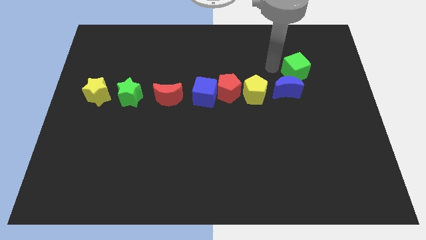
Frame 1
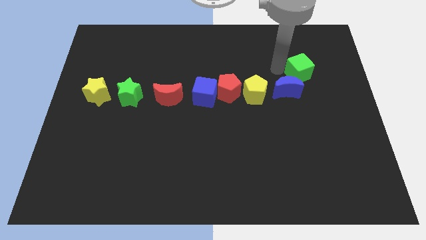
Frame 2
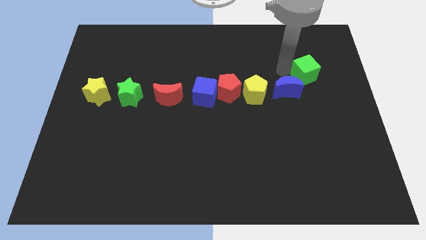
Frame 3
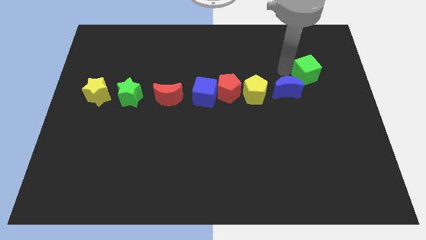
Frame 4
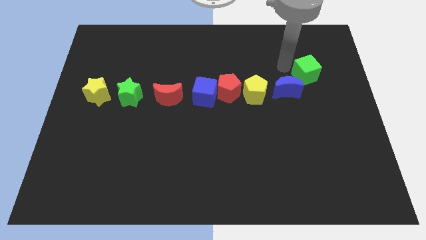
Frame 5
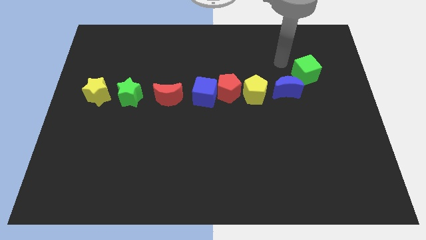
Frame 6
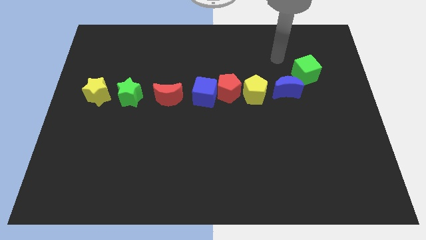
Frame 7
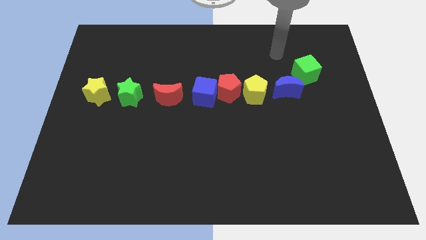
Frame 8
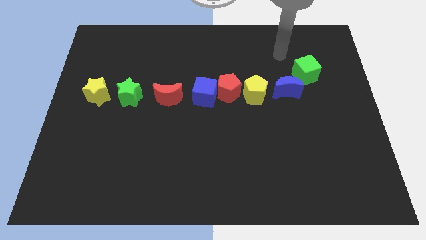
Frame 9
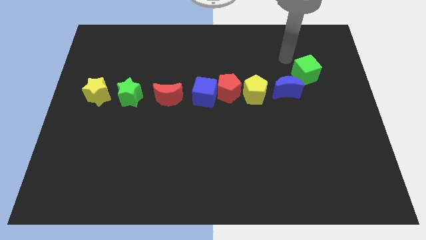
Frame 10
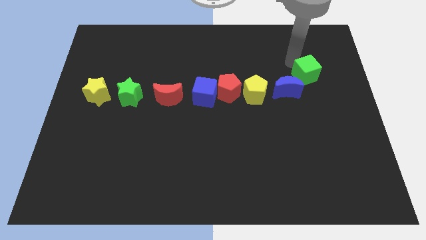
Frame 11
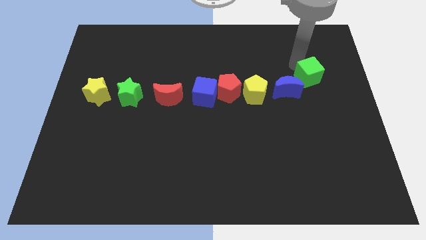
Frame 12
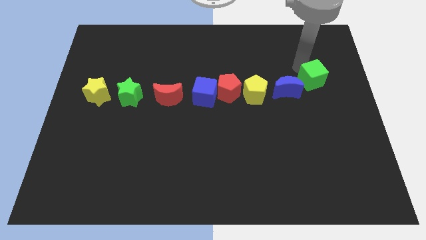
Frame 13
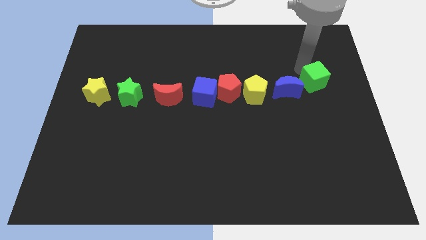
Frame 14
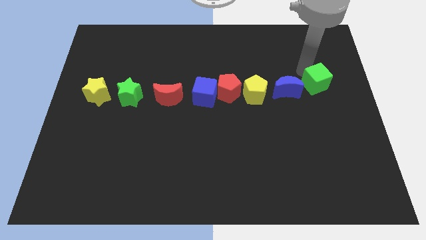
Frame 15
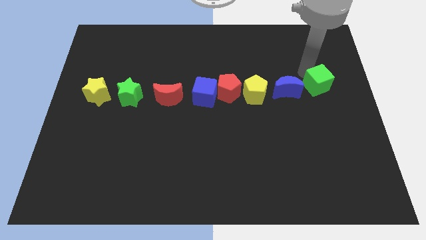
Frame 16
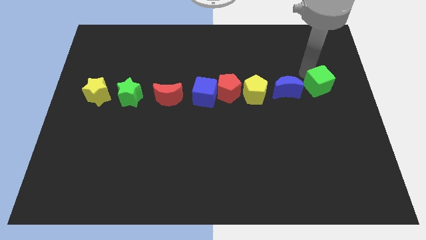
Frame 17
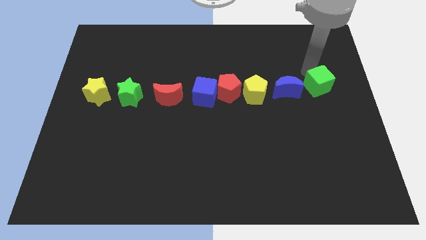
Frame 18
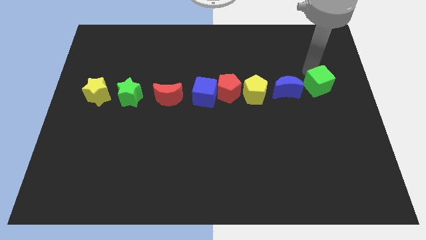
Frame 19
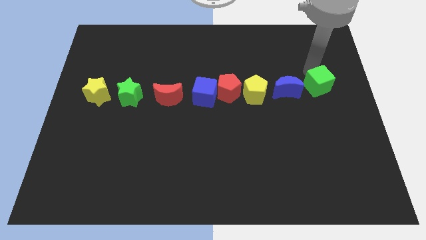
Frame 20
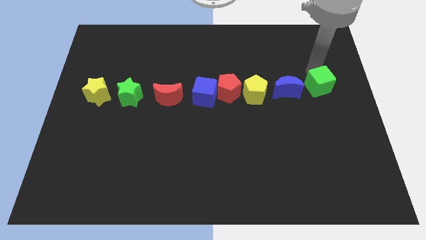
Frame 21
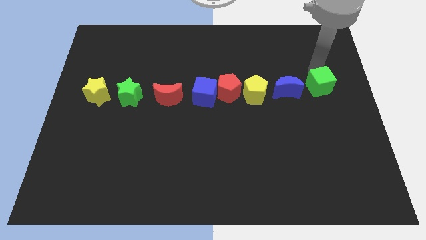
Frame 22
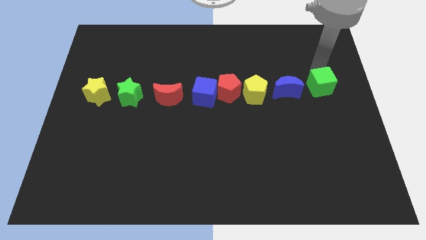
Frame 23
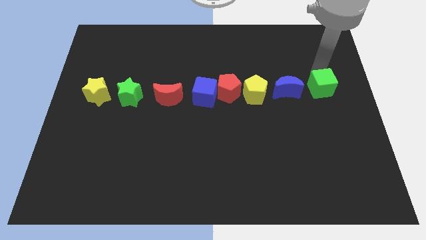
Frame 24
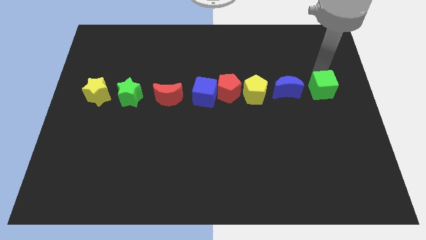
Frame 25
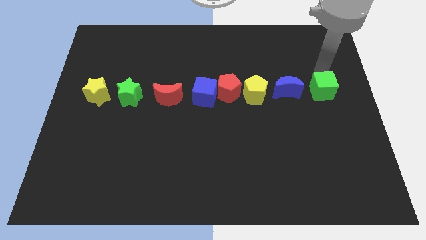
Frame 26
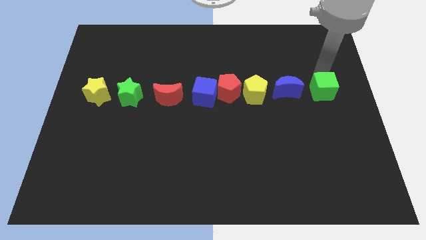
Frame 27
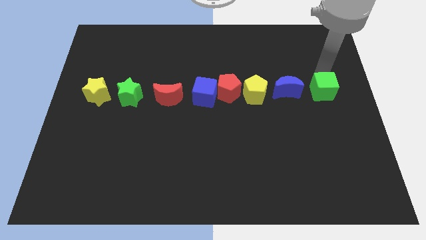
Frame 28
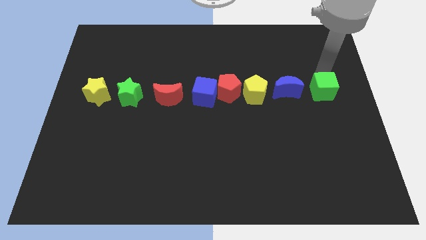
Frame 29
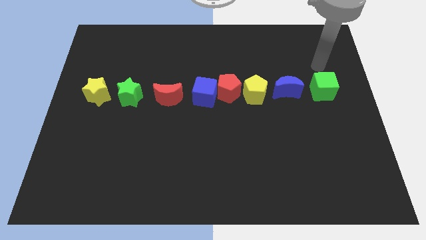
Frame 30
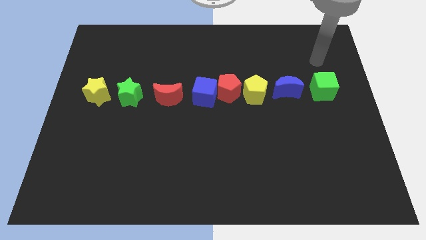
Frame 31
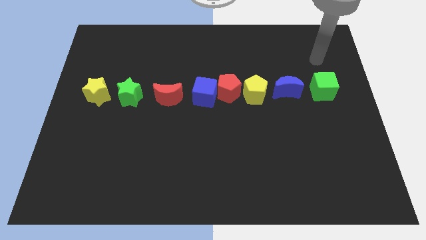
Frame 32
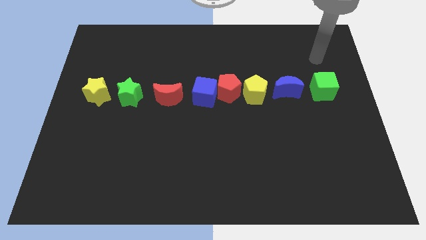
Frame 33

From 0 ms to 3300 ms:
move green cube on right to blue crescent

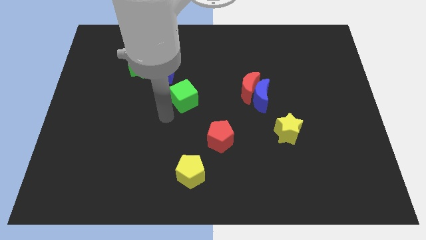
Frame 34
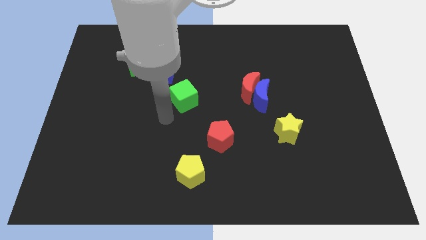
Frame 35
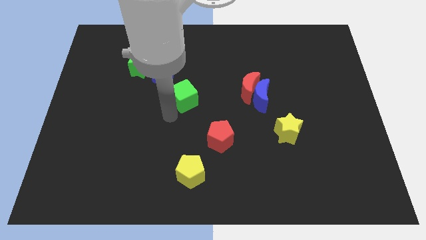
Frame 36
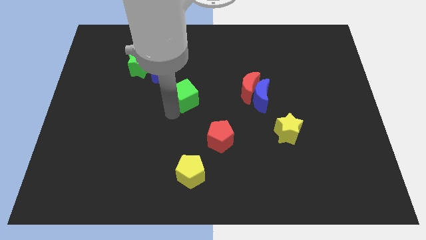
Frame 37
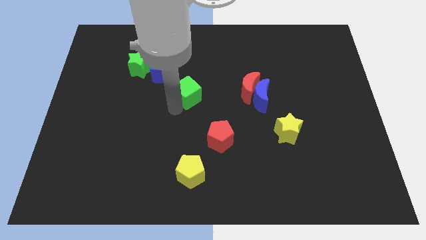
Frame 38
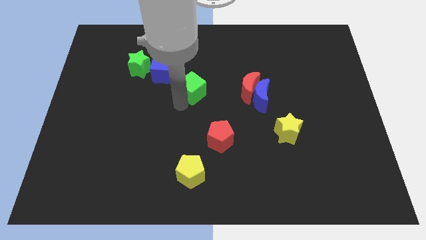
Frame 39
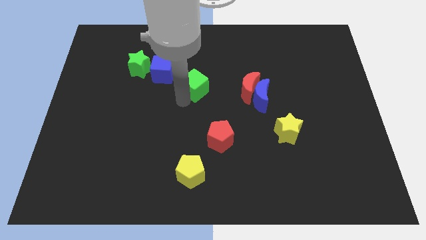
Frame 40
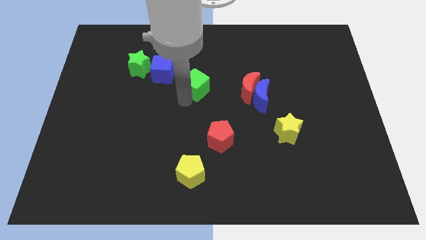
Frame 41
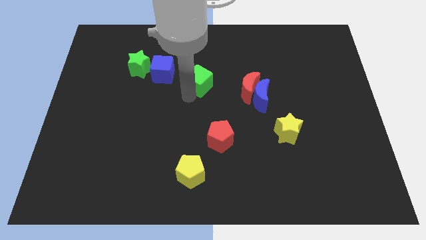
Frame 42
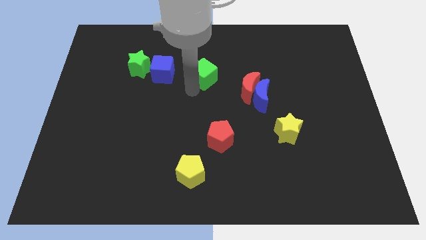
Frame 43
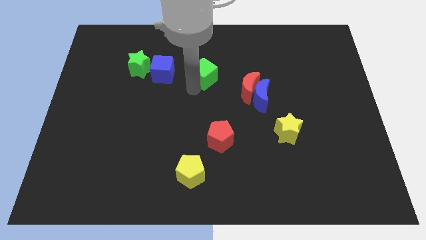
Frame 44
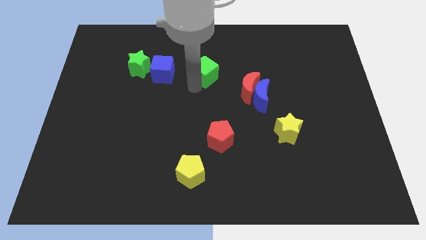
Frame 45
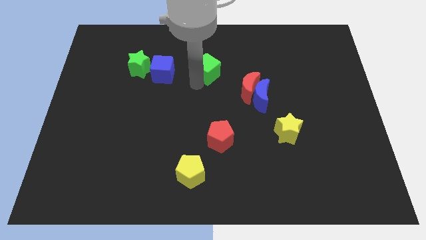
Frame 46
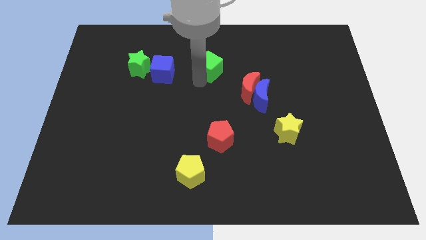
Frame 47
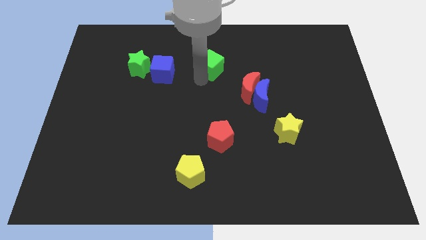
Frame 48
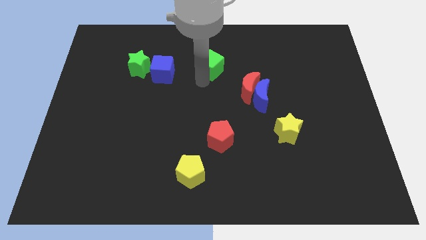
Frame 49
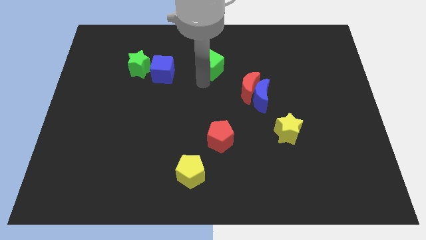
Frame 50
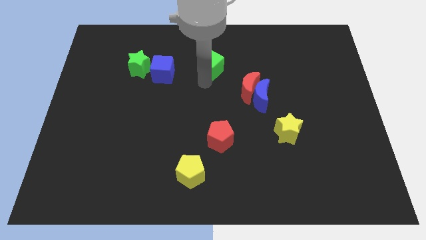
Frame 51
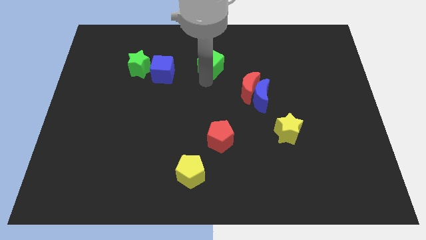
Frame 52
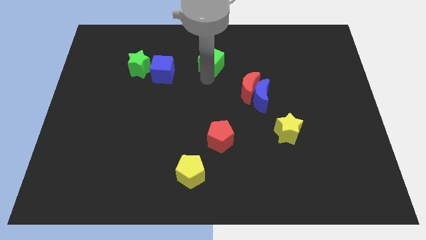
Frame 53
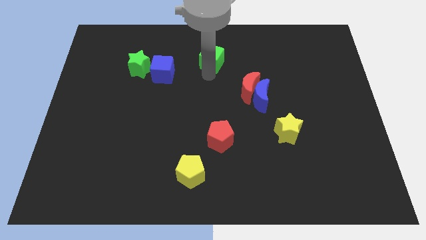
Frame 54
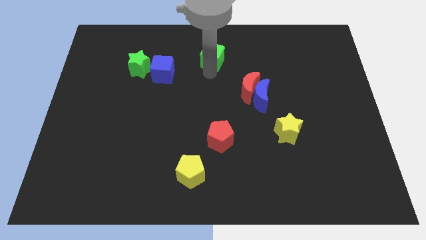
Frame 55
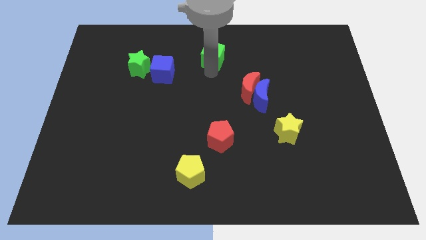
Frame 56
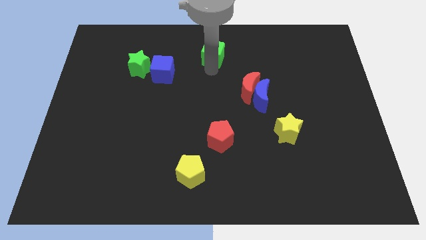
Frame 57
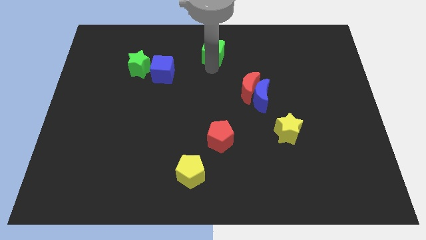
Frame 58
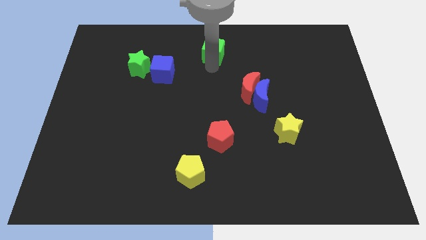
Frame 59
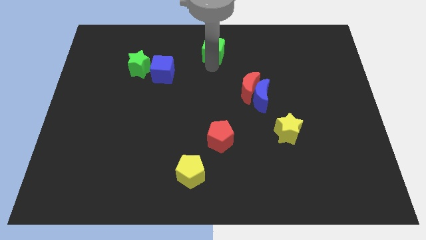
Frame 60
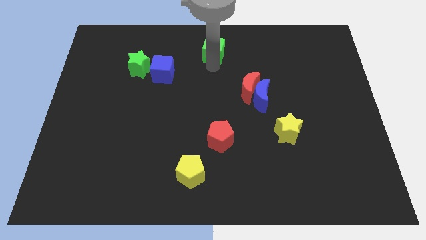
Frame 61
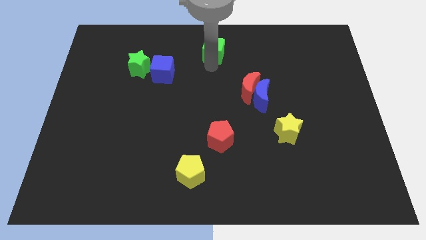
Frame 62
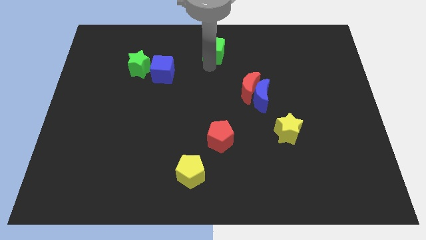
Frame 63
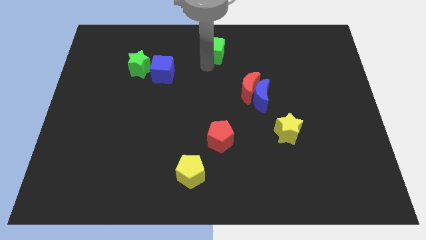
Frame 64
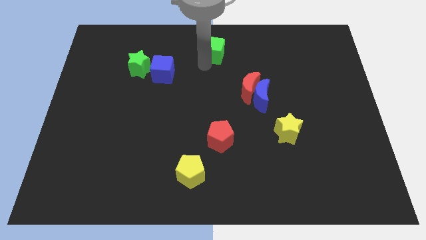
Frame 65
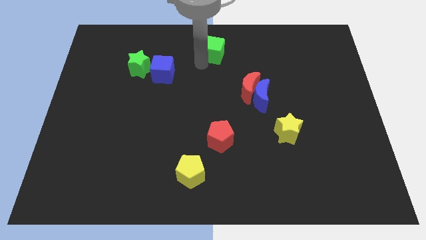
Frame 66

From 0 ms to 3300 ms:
push the green cube to the top center of the board

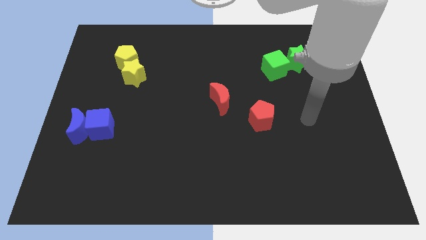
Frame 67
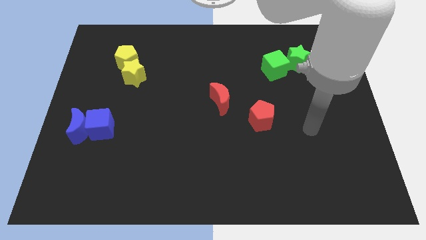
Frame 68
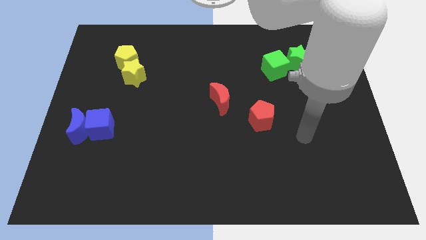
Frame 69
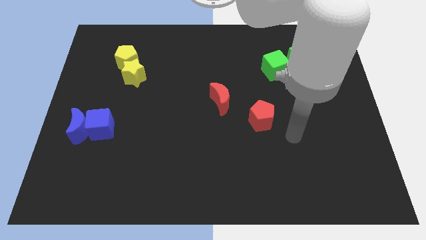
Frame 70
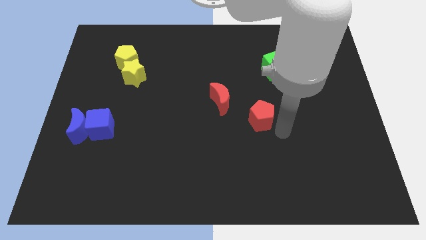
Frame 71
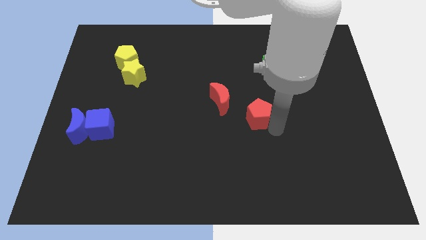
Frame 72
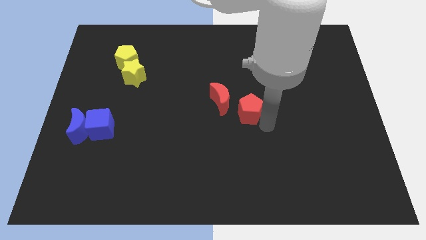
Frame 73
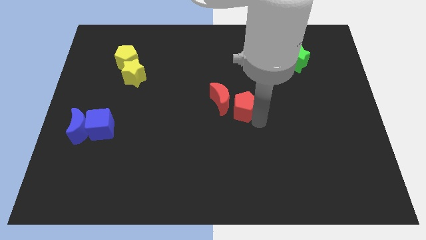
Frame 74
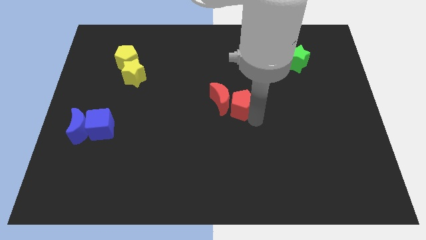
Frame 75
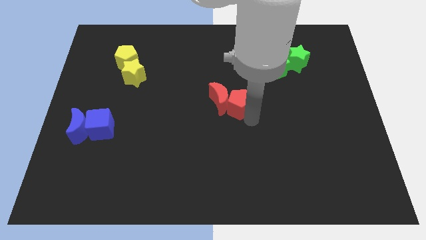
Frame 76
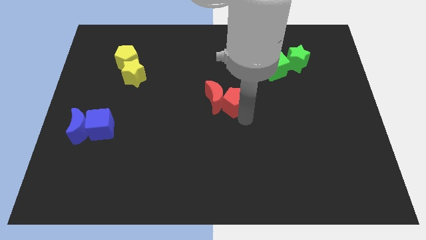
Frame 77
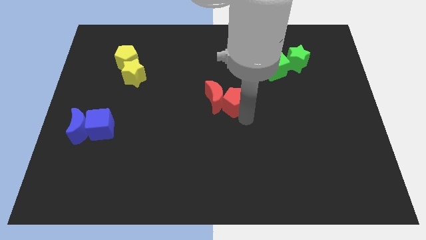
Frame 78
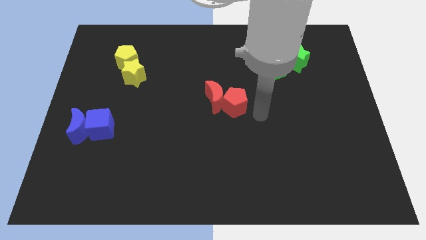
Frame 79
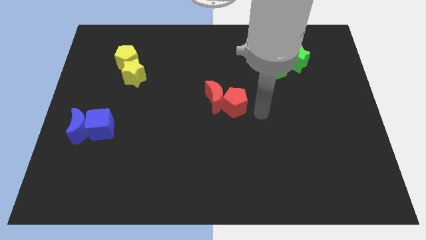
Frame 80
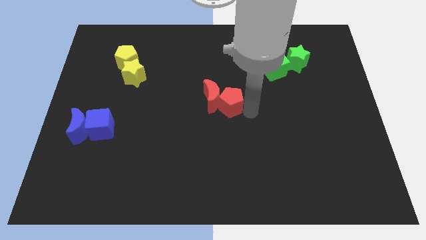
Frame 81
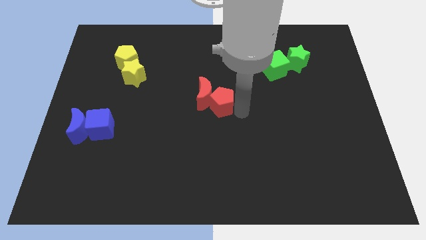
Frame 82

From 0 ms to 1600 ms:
move red pentagon right beside the red moon

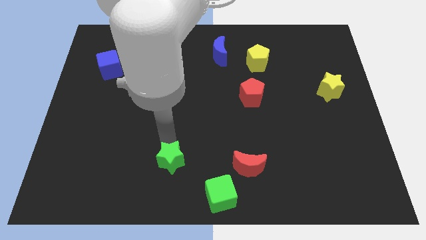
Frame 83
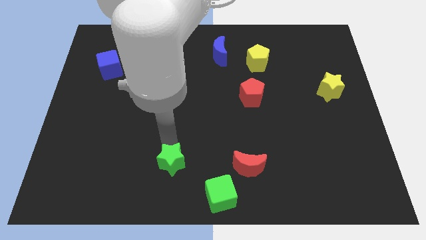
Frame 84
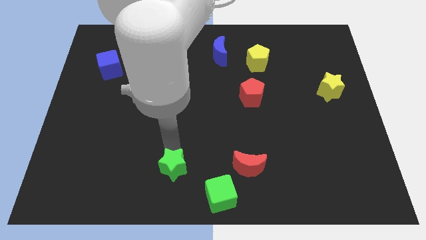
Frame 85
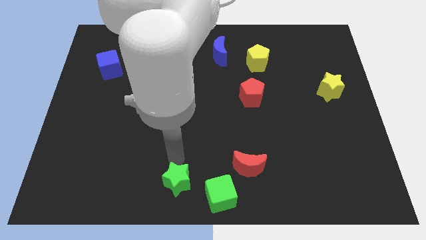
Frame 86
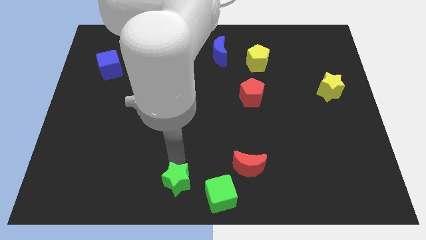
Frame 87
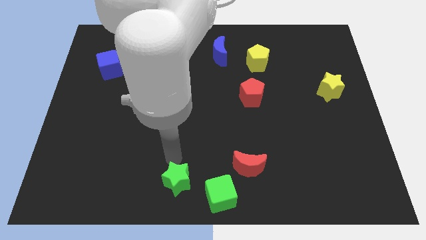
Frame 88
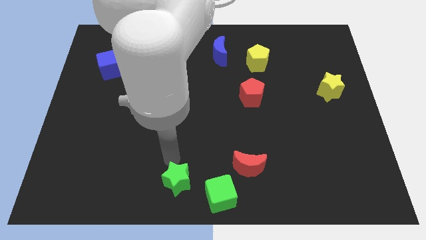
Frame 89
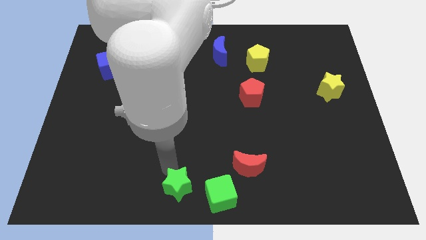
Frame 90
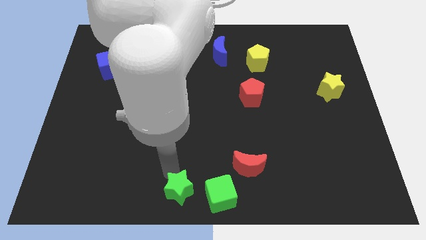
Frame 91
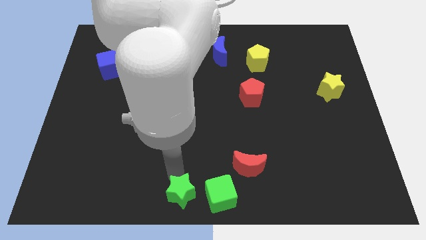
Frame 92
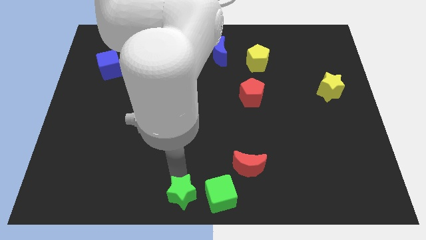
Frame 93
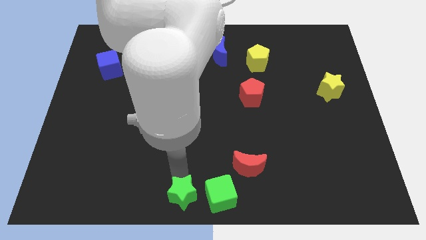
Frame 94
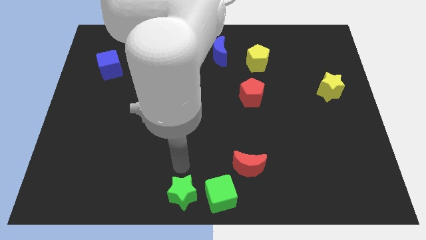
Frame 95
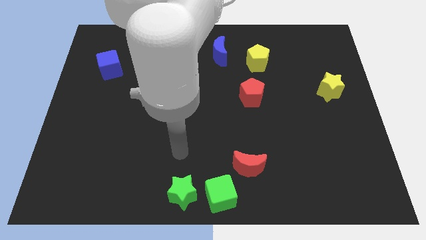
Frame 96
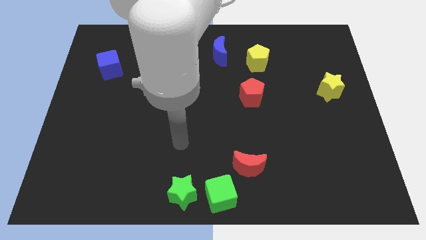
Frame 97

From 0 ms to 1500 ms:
move green star near green cube
